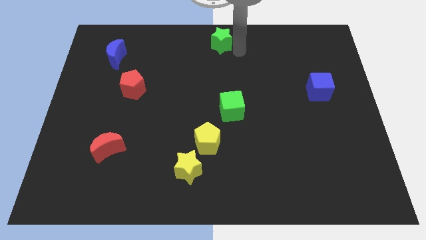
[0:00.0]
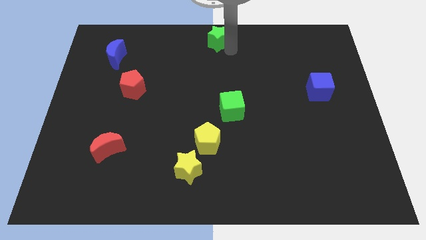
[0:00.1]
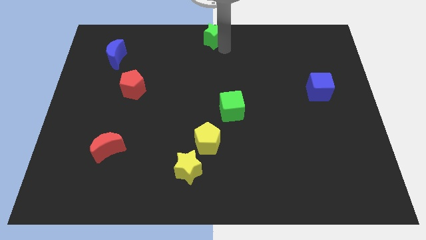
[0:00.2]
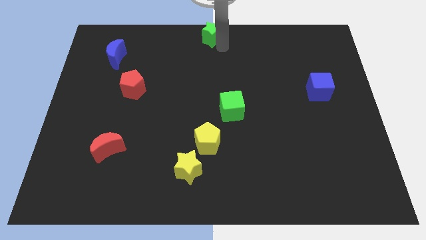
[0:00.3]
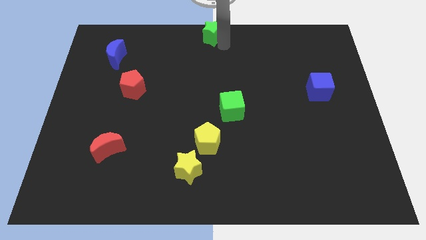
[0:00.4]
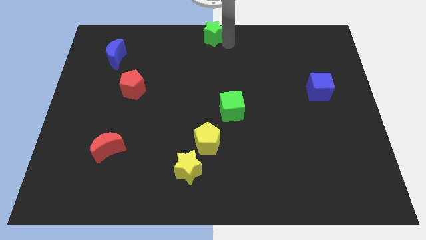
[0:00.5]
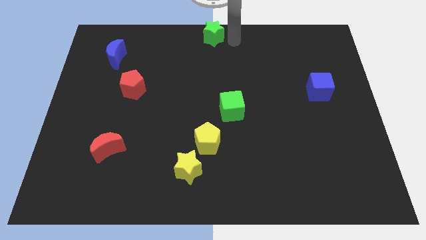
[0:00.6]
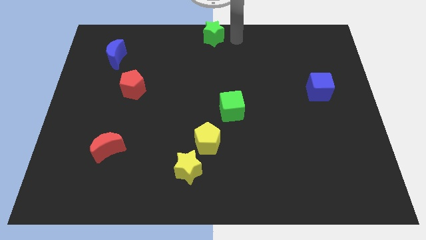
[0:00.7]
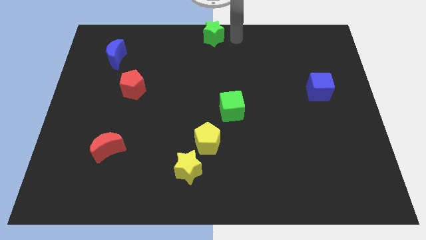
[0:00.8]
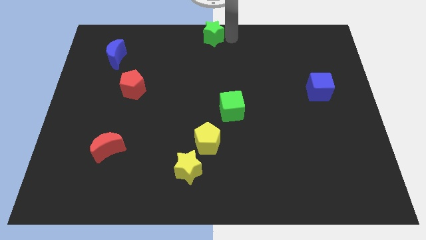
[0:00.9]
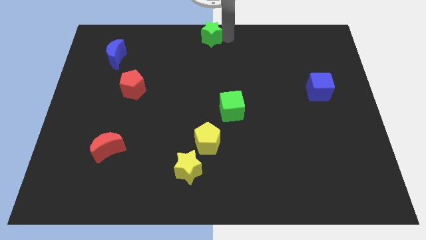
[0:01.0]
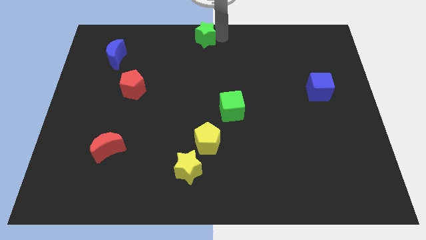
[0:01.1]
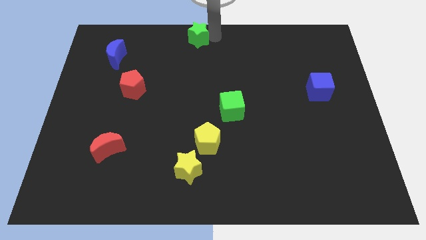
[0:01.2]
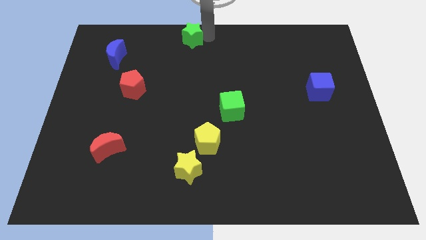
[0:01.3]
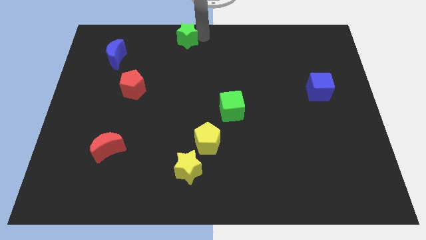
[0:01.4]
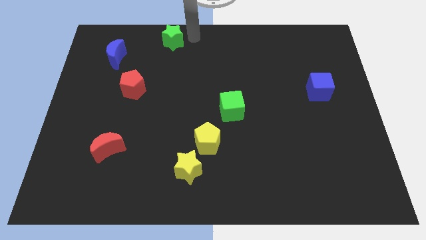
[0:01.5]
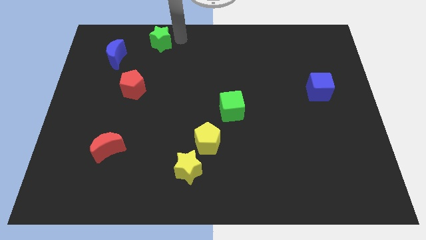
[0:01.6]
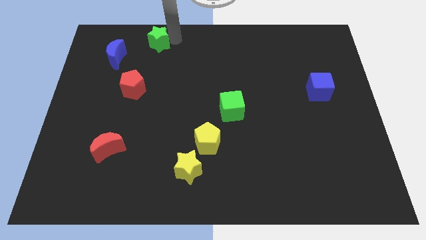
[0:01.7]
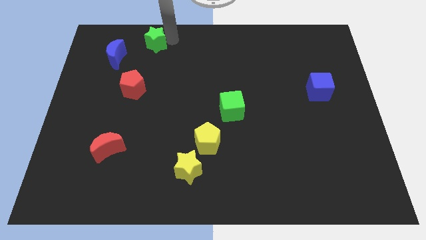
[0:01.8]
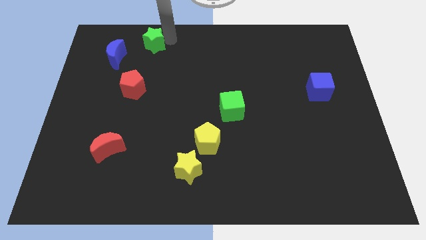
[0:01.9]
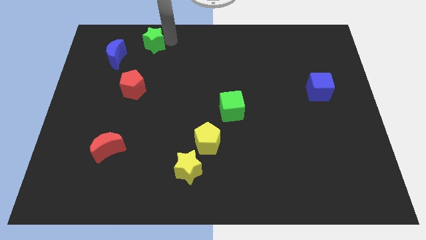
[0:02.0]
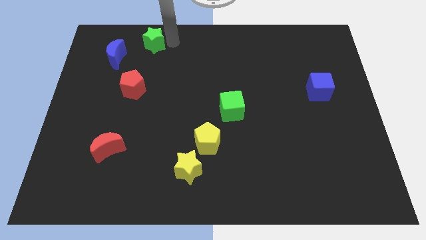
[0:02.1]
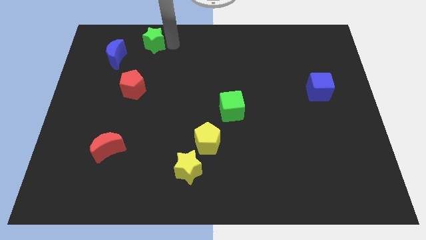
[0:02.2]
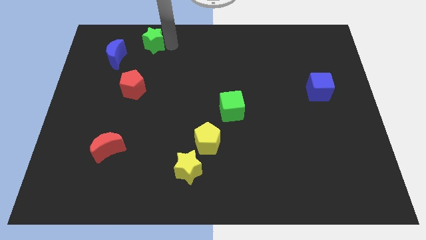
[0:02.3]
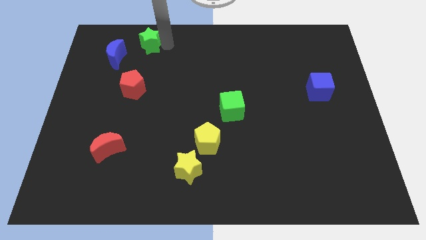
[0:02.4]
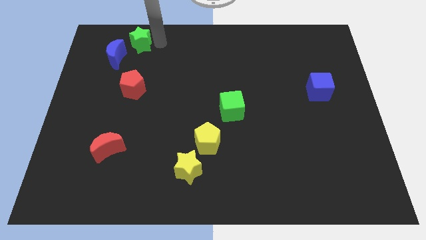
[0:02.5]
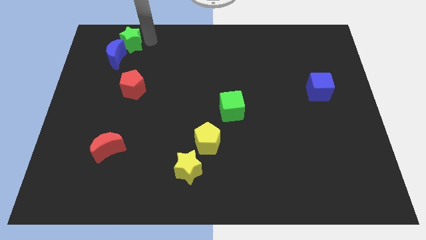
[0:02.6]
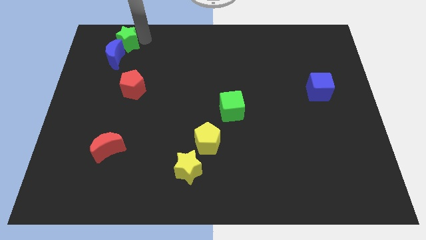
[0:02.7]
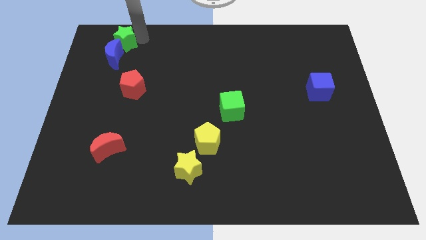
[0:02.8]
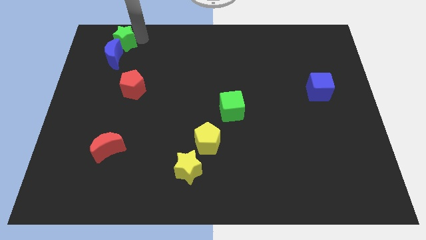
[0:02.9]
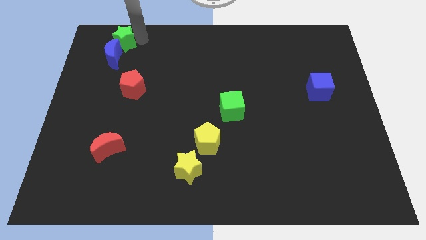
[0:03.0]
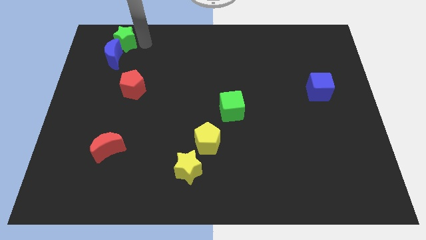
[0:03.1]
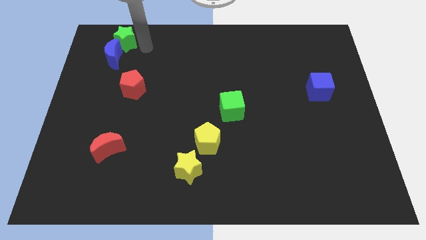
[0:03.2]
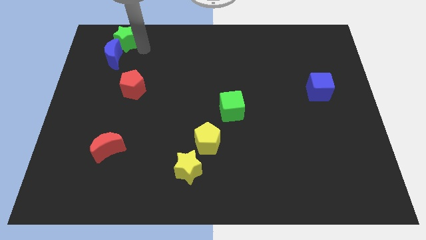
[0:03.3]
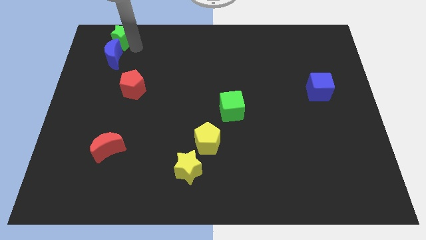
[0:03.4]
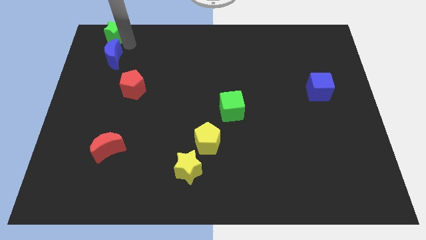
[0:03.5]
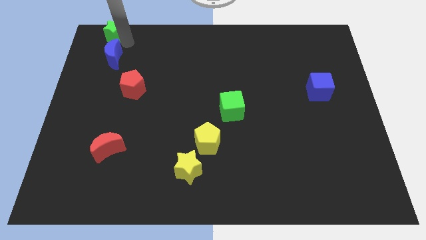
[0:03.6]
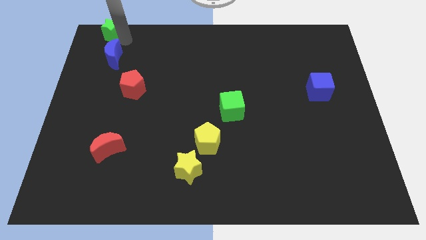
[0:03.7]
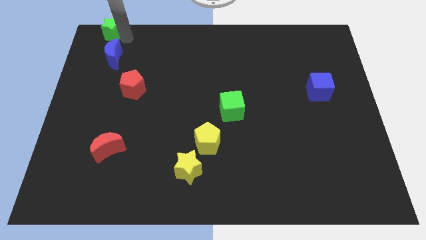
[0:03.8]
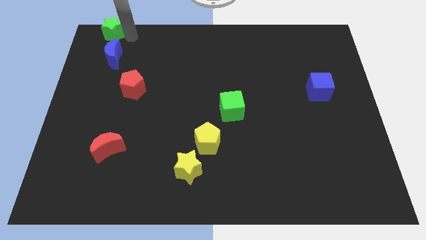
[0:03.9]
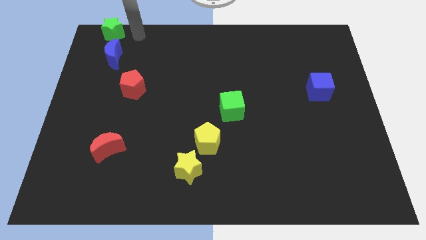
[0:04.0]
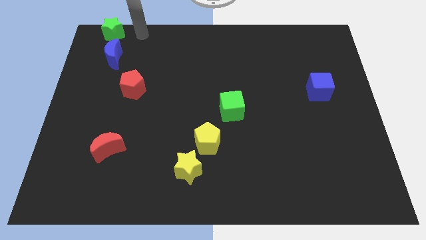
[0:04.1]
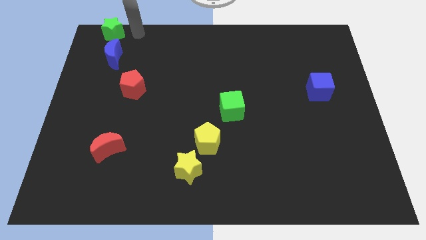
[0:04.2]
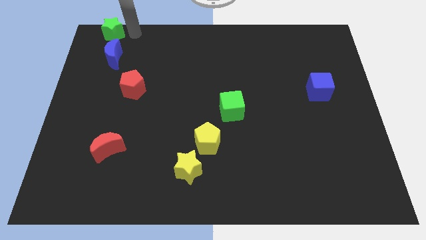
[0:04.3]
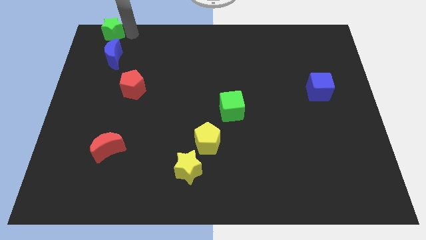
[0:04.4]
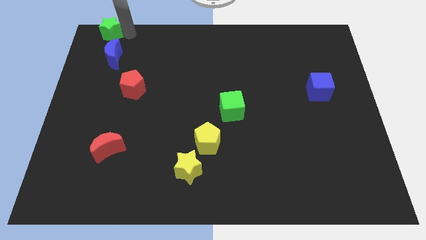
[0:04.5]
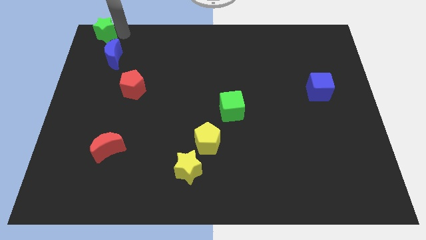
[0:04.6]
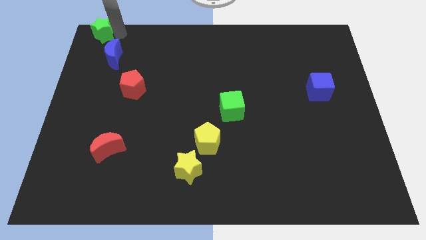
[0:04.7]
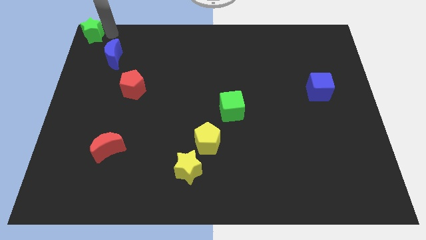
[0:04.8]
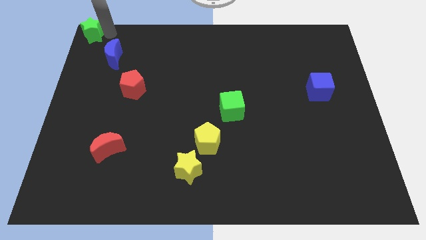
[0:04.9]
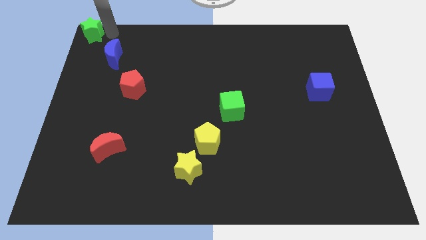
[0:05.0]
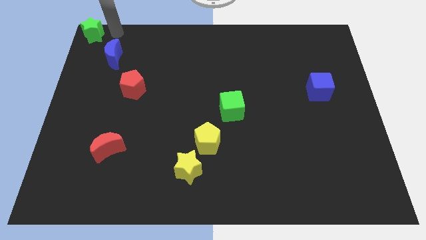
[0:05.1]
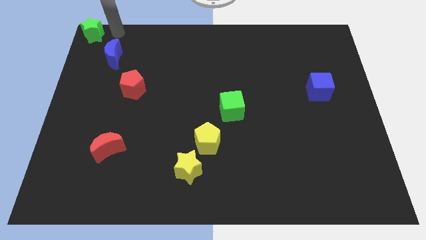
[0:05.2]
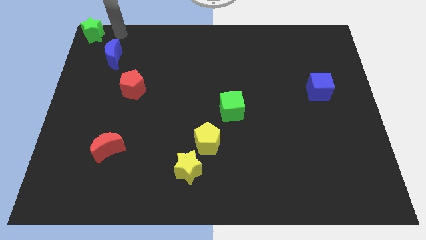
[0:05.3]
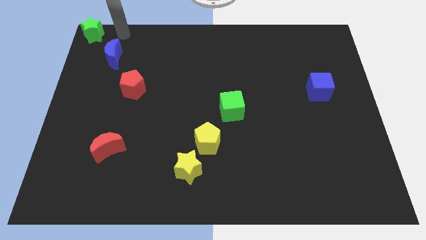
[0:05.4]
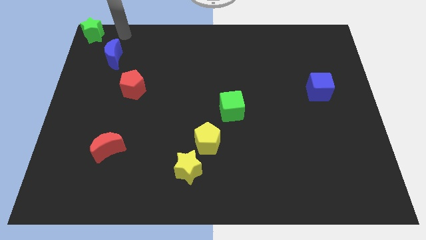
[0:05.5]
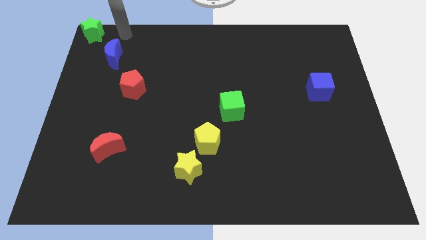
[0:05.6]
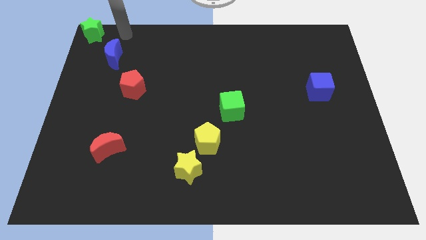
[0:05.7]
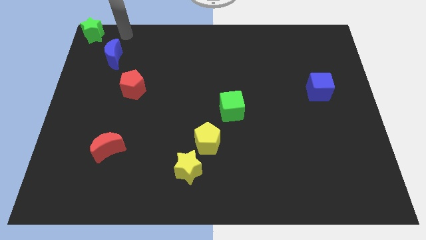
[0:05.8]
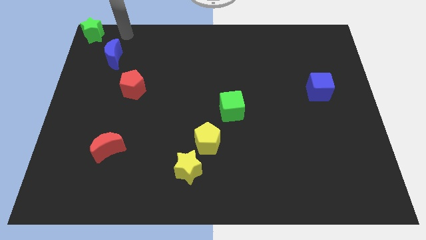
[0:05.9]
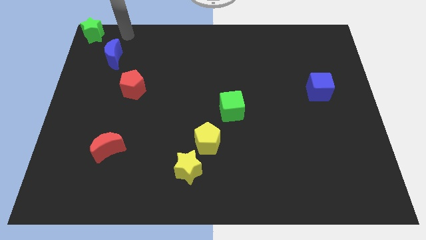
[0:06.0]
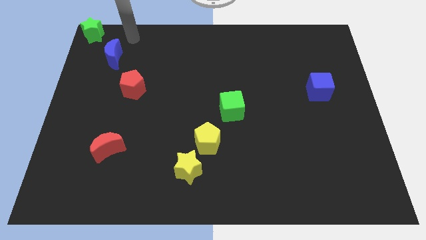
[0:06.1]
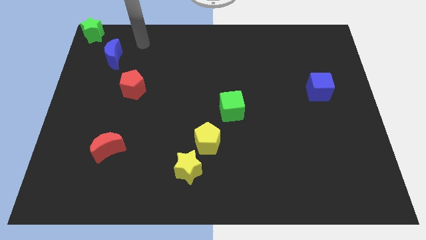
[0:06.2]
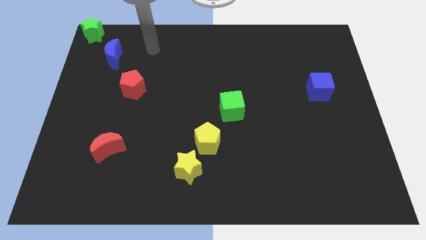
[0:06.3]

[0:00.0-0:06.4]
place green star to the top left corner of the board

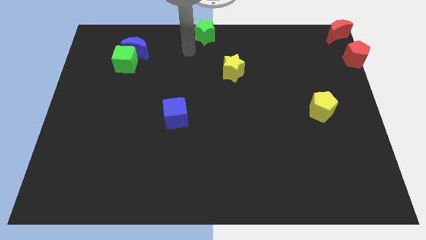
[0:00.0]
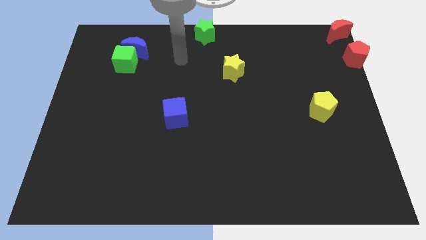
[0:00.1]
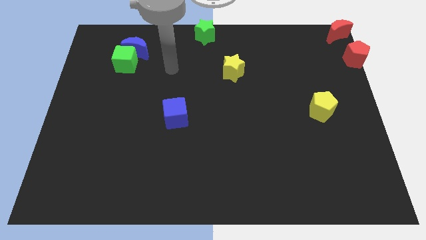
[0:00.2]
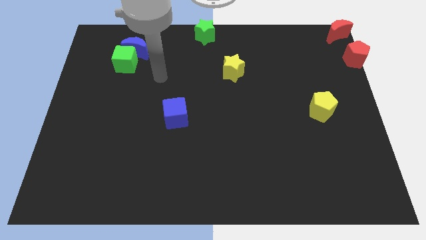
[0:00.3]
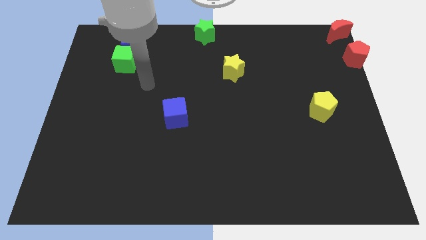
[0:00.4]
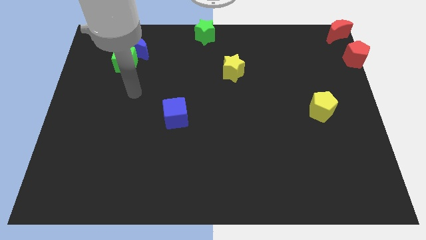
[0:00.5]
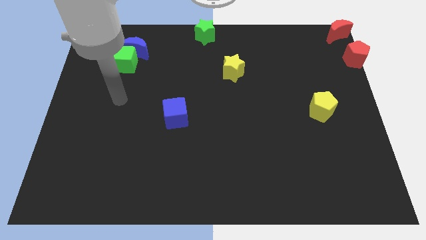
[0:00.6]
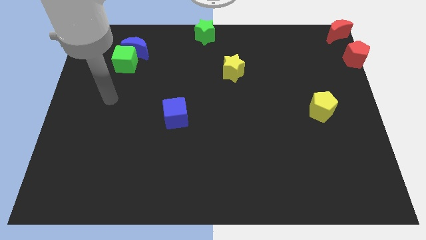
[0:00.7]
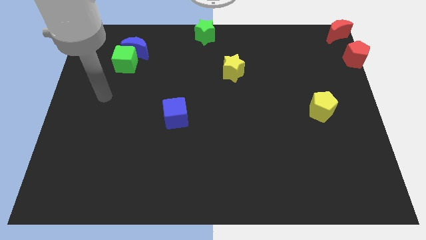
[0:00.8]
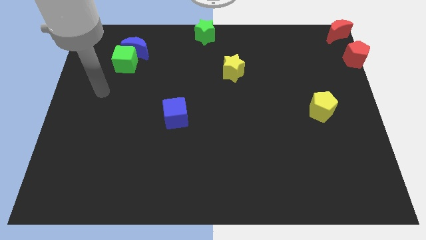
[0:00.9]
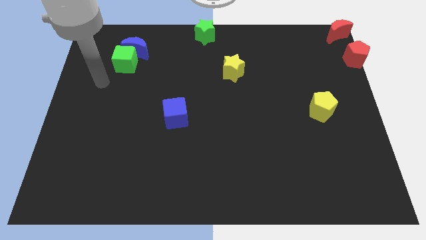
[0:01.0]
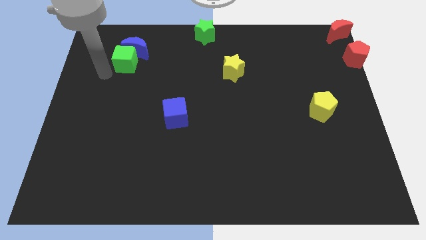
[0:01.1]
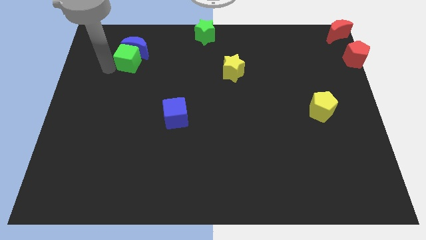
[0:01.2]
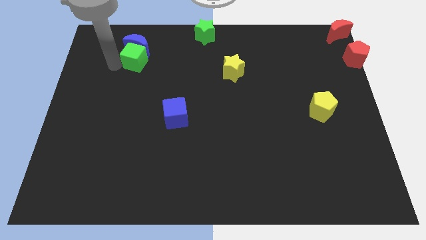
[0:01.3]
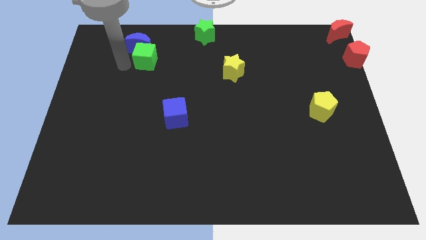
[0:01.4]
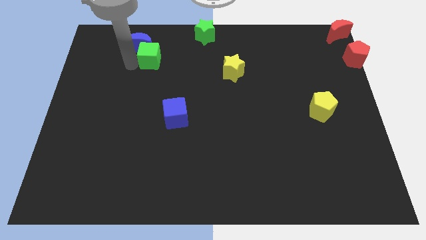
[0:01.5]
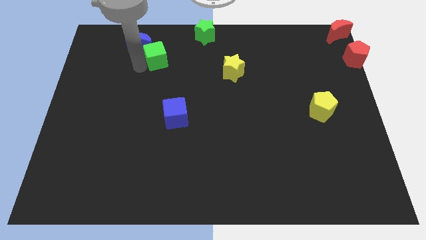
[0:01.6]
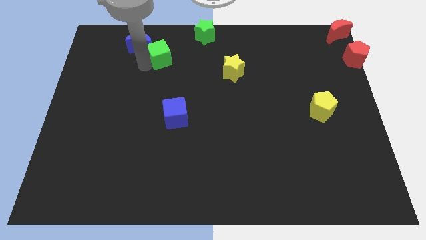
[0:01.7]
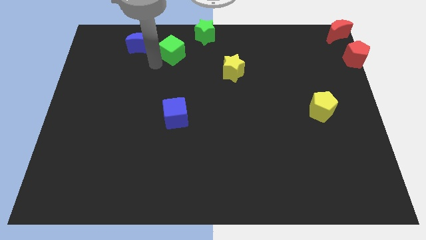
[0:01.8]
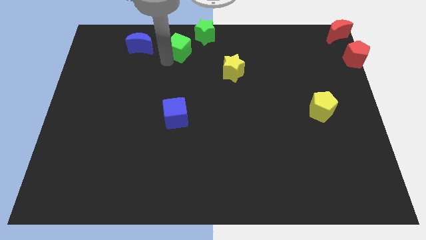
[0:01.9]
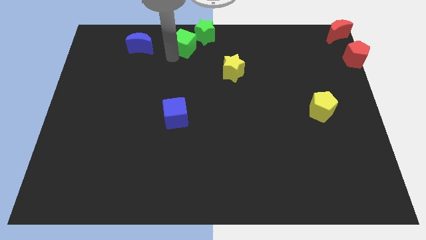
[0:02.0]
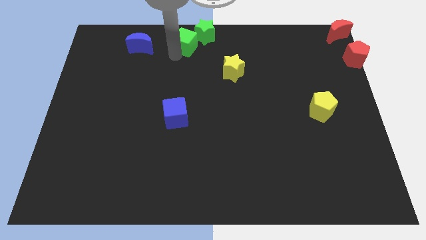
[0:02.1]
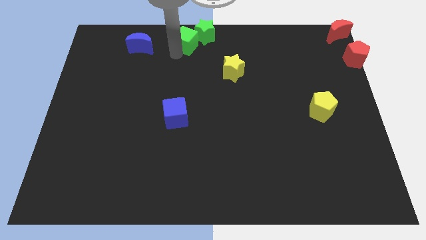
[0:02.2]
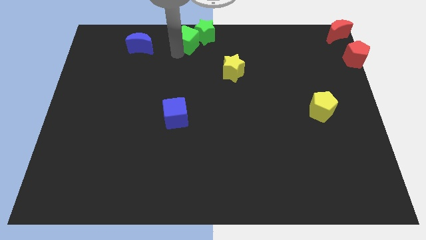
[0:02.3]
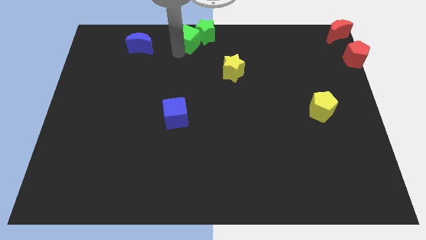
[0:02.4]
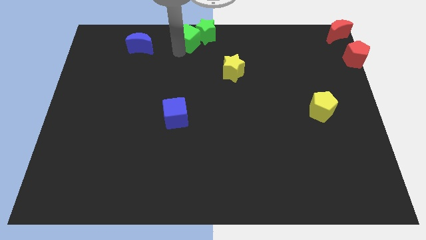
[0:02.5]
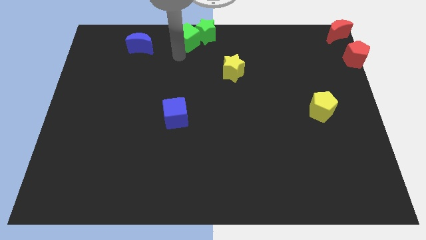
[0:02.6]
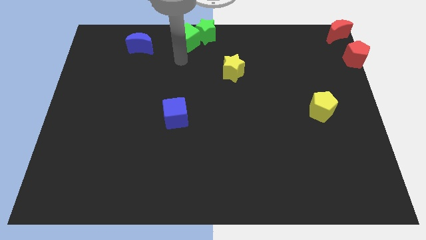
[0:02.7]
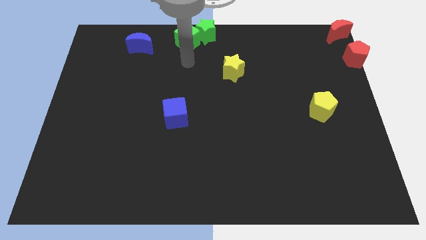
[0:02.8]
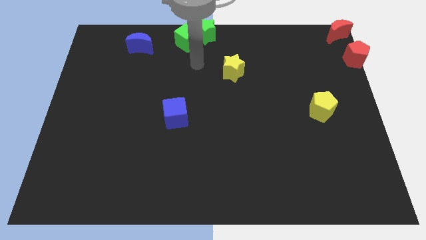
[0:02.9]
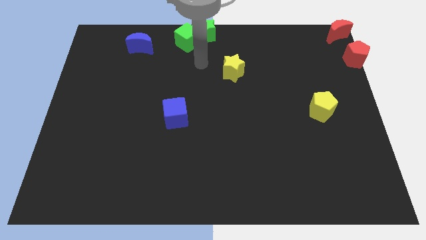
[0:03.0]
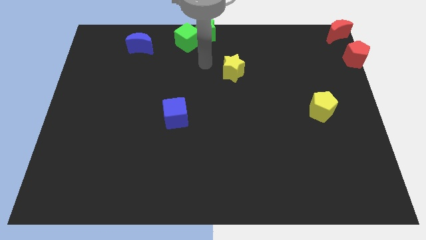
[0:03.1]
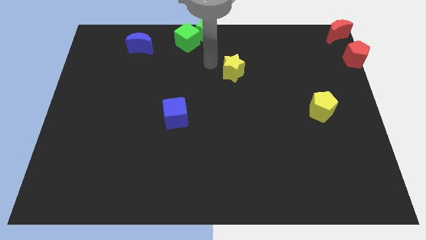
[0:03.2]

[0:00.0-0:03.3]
push the green cube into the green star
